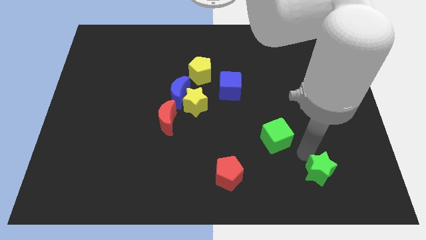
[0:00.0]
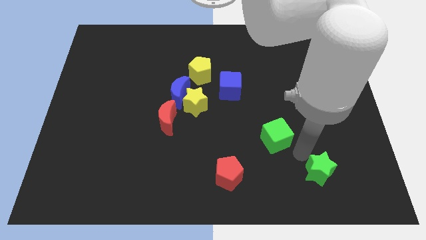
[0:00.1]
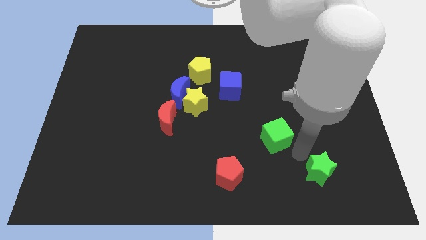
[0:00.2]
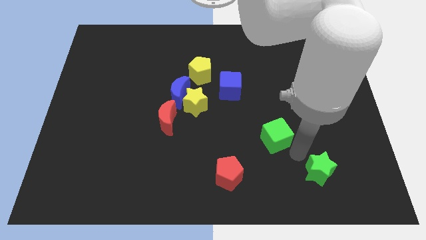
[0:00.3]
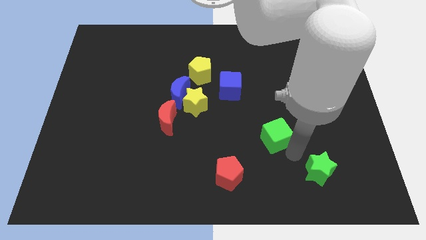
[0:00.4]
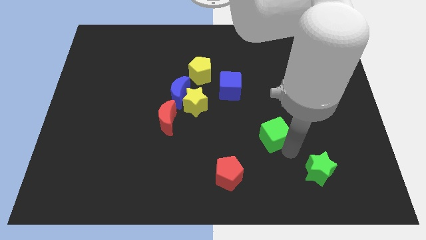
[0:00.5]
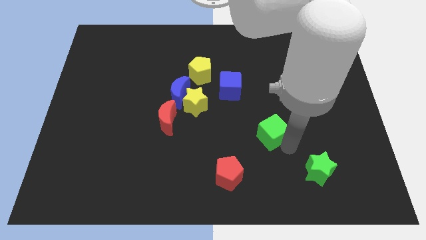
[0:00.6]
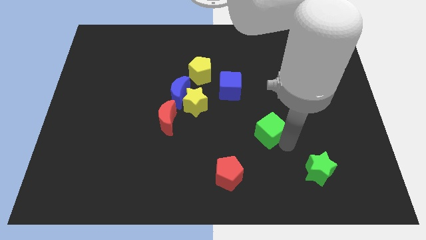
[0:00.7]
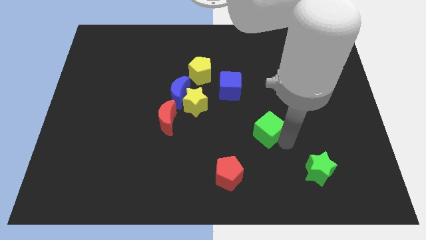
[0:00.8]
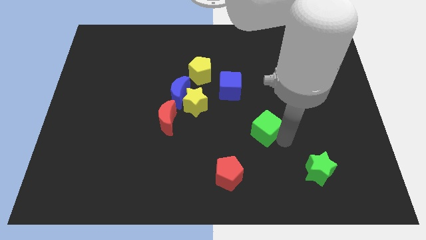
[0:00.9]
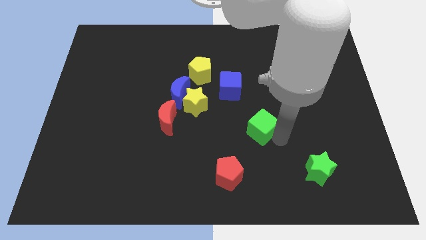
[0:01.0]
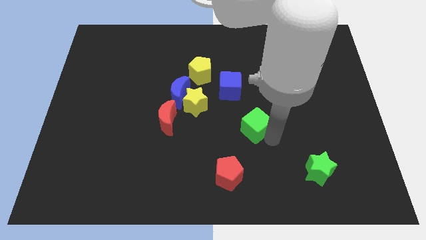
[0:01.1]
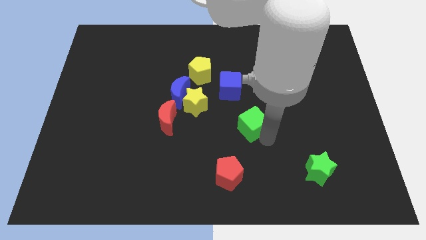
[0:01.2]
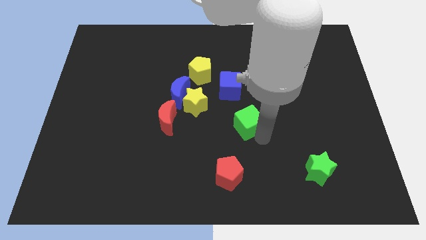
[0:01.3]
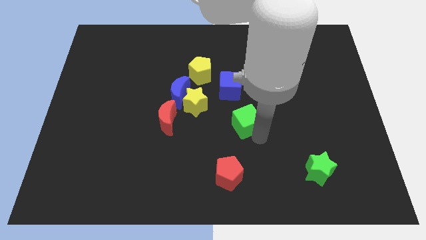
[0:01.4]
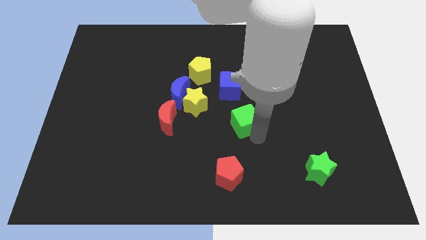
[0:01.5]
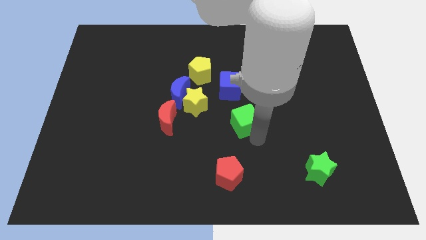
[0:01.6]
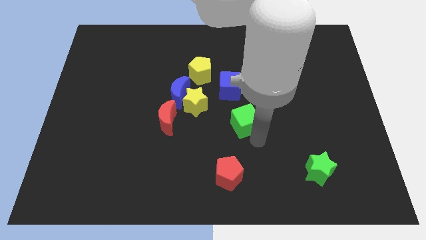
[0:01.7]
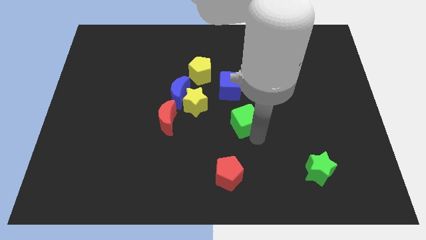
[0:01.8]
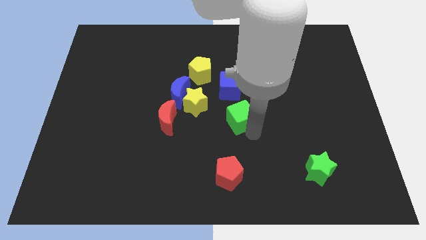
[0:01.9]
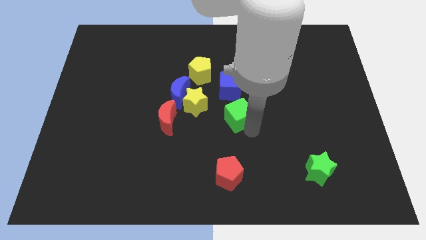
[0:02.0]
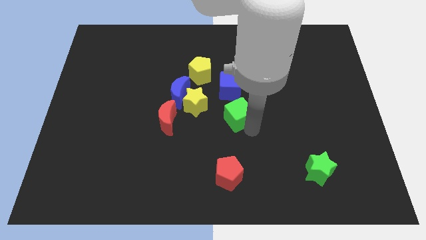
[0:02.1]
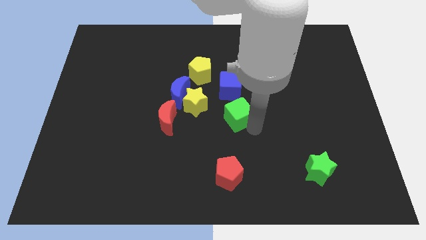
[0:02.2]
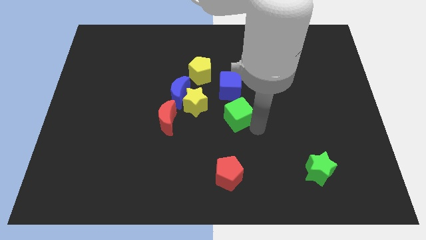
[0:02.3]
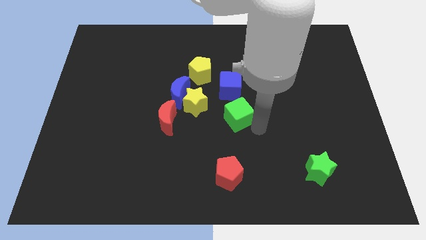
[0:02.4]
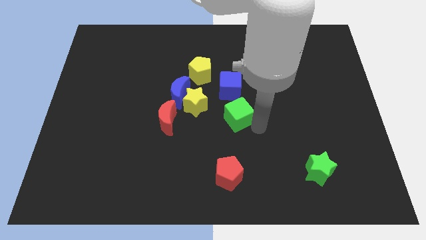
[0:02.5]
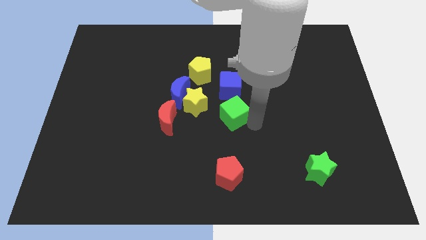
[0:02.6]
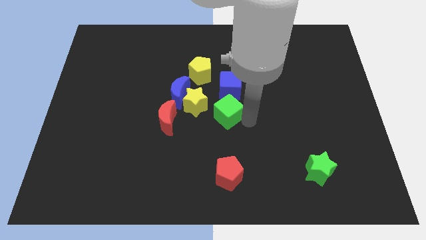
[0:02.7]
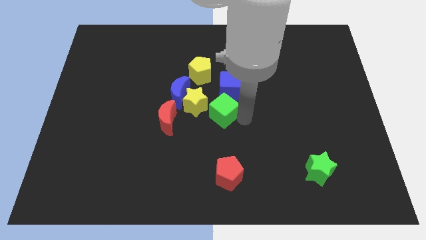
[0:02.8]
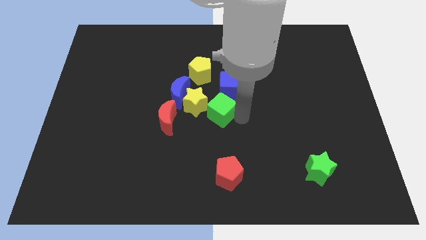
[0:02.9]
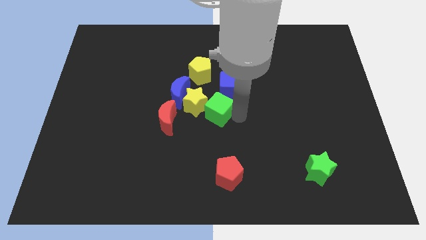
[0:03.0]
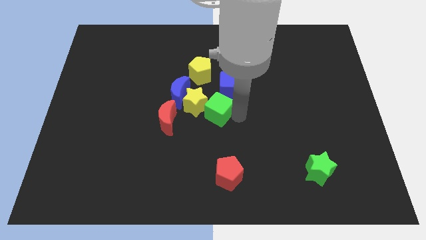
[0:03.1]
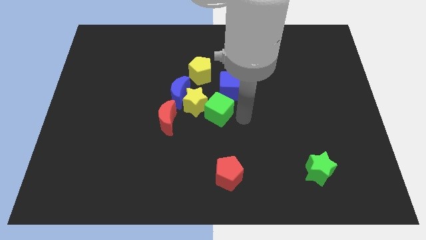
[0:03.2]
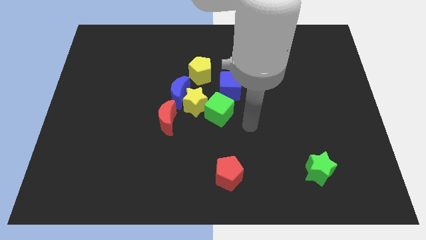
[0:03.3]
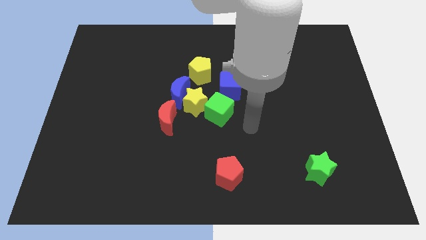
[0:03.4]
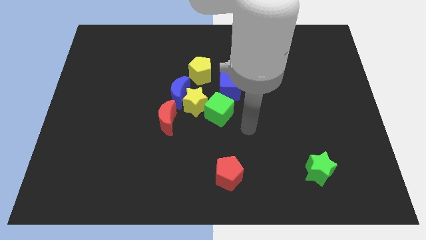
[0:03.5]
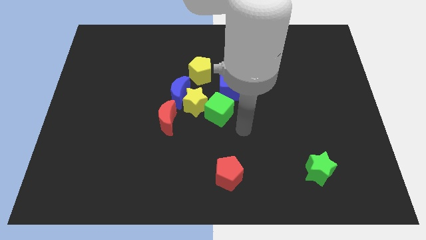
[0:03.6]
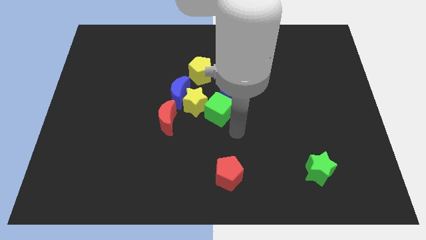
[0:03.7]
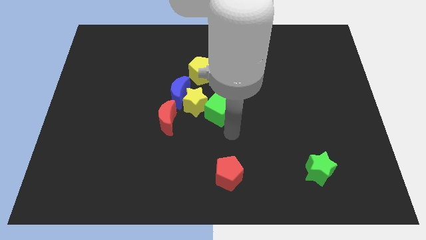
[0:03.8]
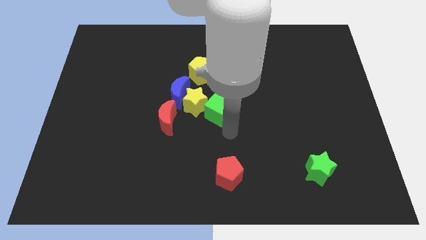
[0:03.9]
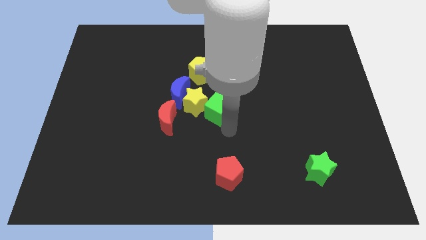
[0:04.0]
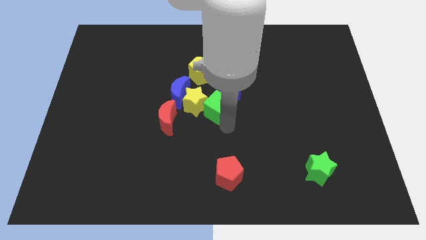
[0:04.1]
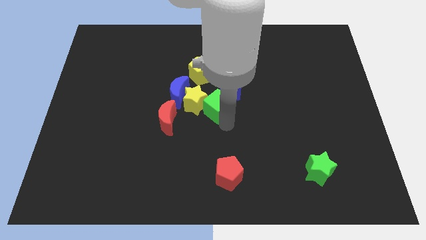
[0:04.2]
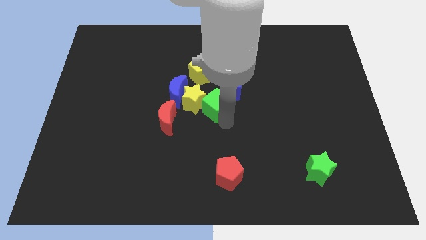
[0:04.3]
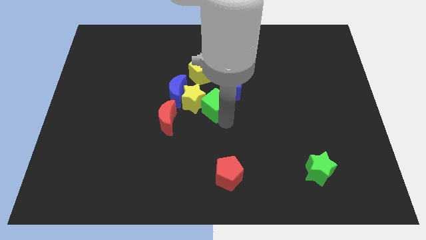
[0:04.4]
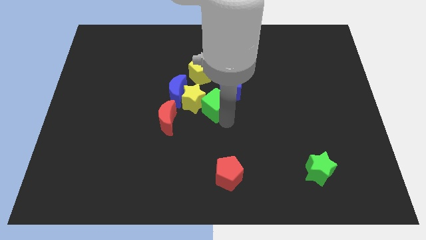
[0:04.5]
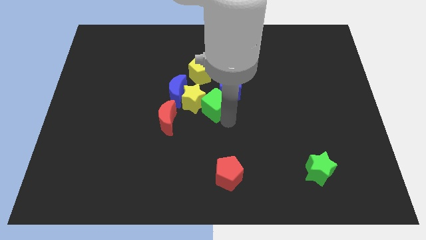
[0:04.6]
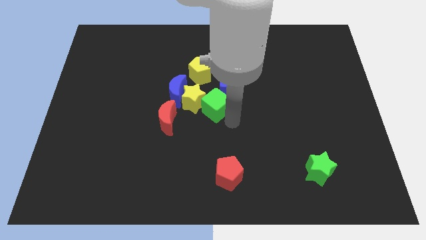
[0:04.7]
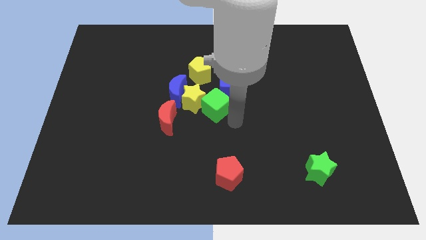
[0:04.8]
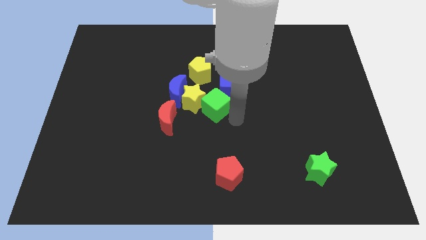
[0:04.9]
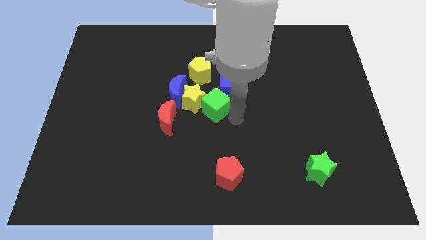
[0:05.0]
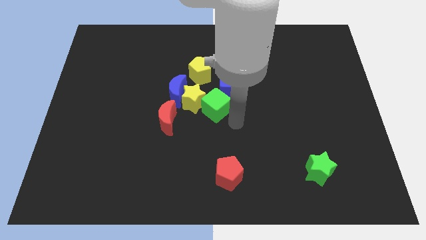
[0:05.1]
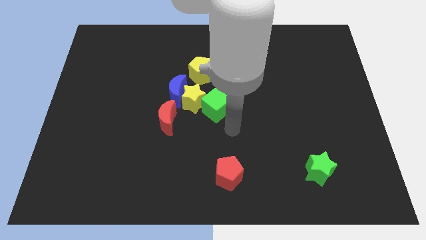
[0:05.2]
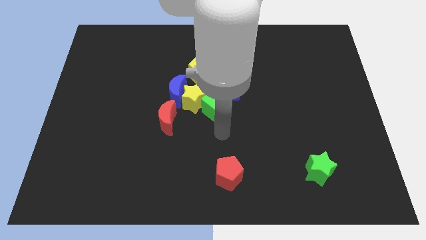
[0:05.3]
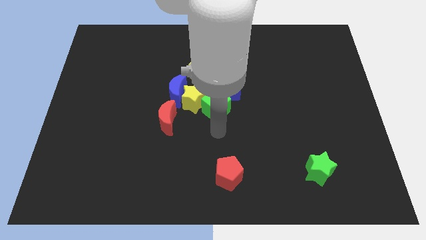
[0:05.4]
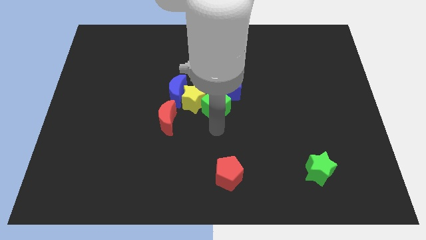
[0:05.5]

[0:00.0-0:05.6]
place the green cube to the right of the yellow star

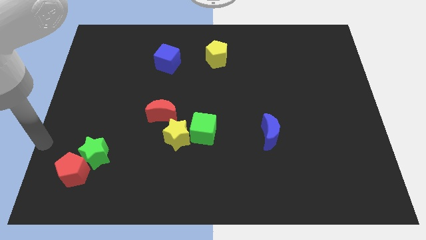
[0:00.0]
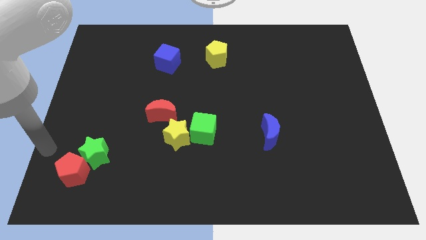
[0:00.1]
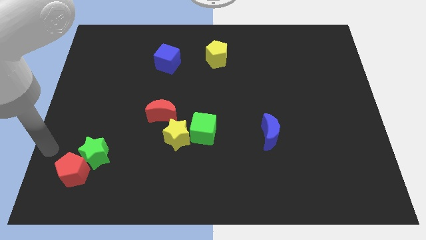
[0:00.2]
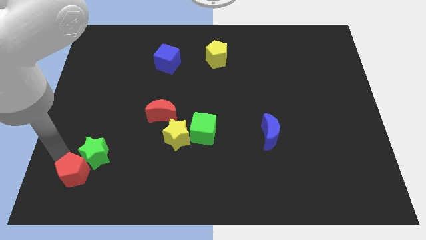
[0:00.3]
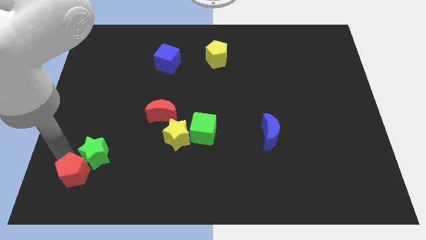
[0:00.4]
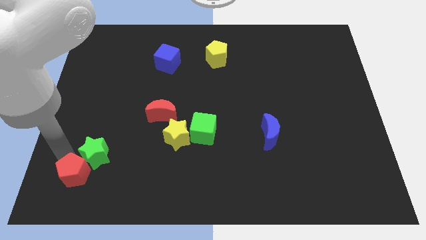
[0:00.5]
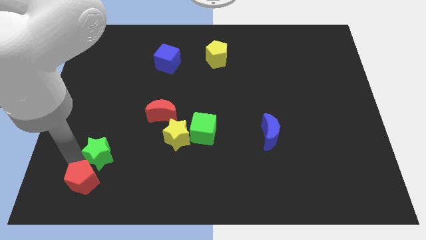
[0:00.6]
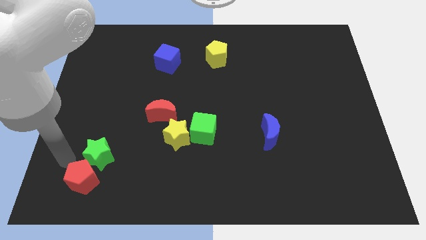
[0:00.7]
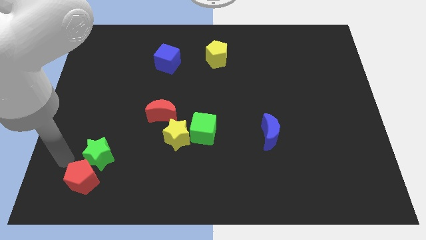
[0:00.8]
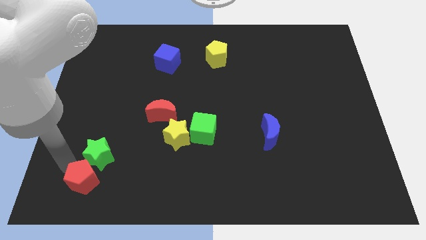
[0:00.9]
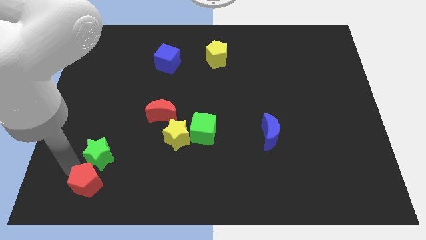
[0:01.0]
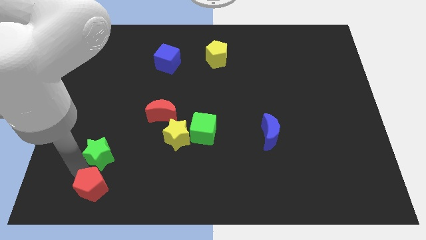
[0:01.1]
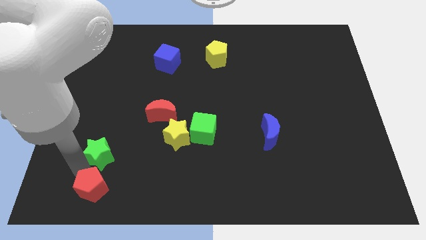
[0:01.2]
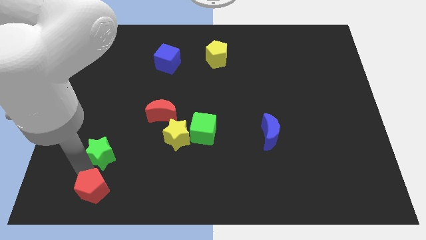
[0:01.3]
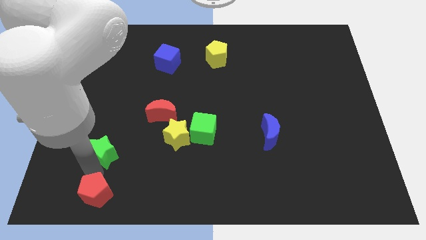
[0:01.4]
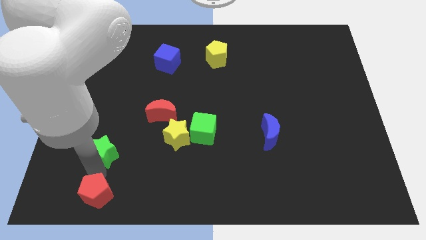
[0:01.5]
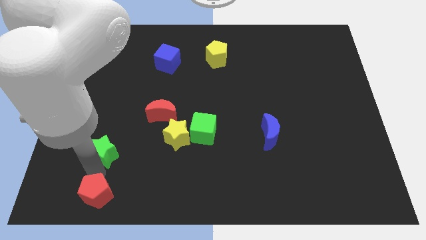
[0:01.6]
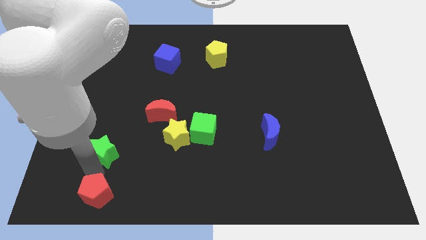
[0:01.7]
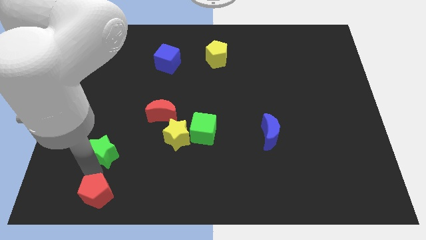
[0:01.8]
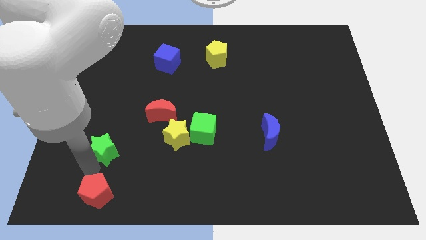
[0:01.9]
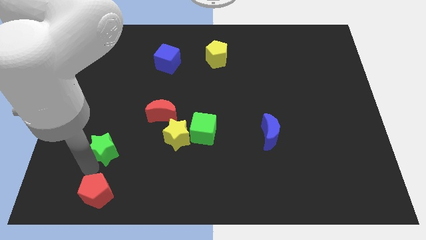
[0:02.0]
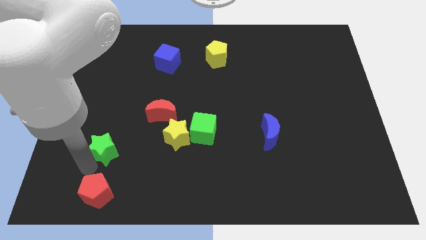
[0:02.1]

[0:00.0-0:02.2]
separate the red pentagon and the green star

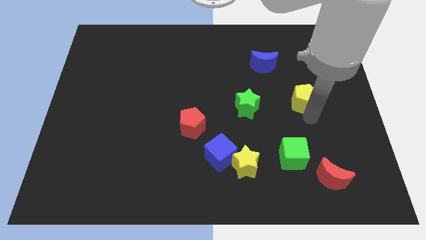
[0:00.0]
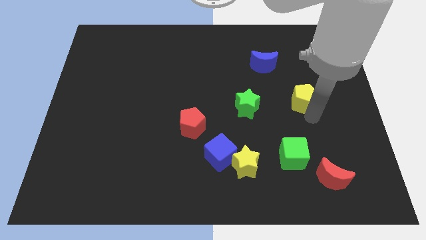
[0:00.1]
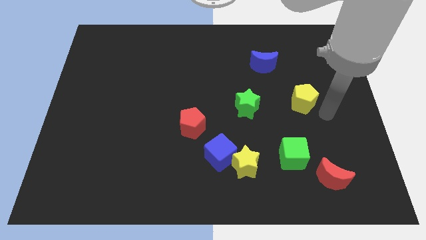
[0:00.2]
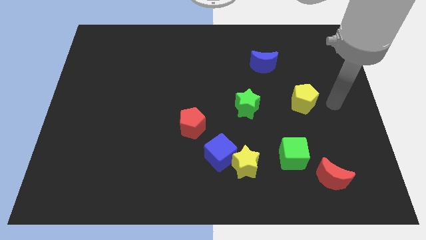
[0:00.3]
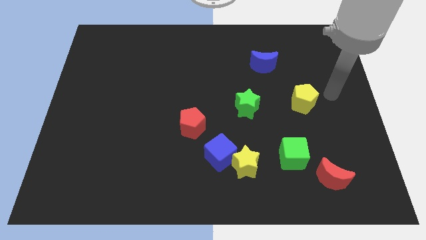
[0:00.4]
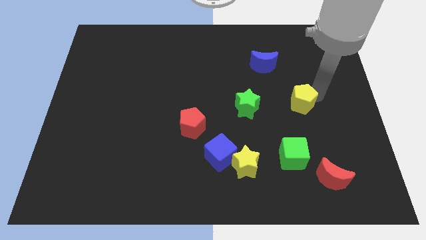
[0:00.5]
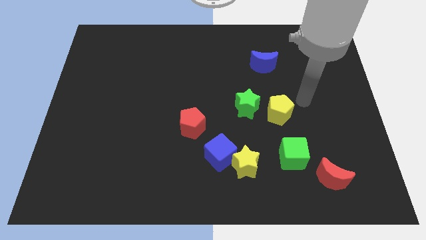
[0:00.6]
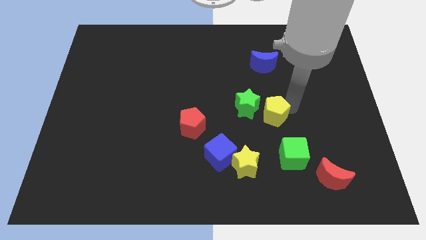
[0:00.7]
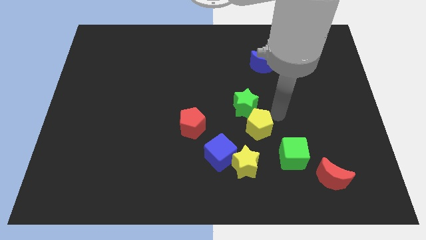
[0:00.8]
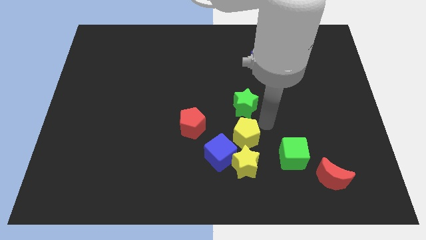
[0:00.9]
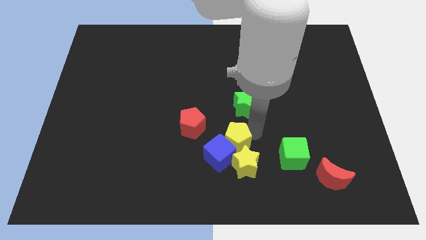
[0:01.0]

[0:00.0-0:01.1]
place yellow pentagon to the bottom of the green star
